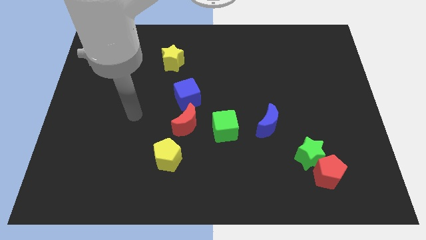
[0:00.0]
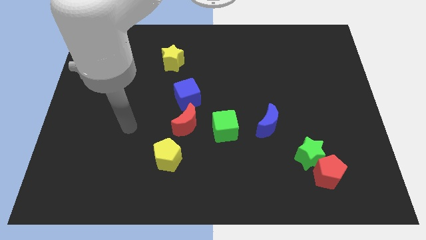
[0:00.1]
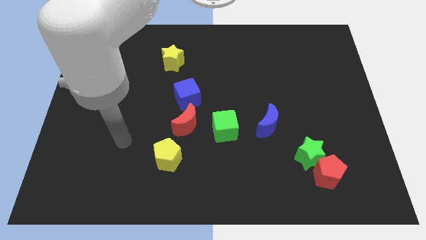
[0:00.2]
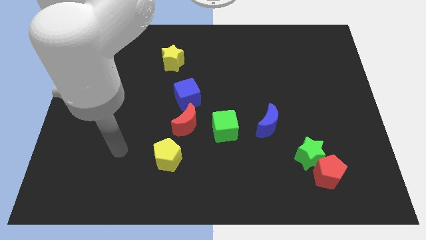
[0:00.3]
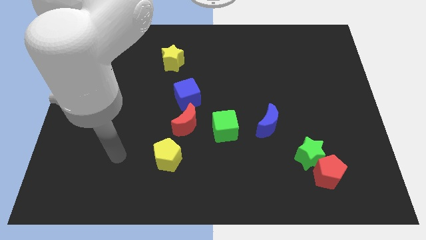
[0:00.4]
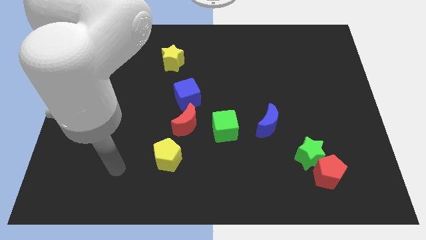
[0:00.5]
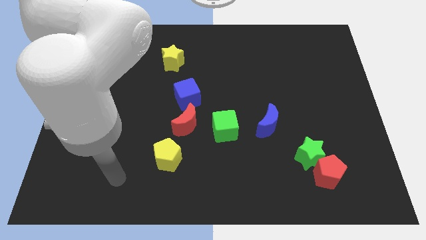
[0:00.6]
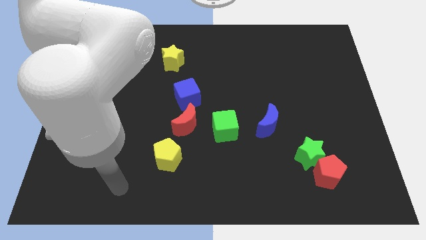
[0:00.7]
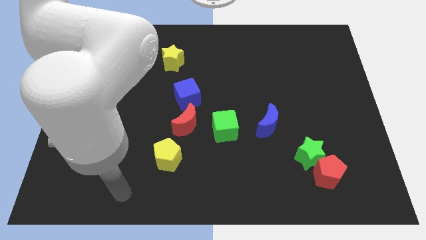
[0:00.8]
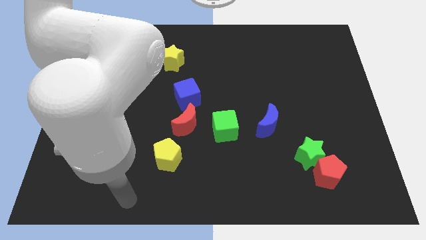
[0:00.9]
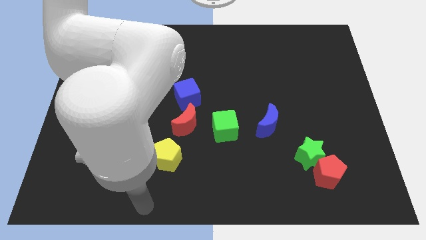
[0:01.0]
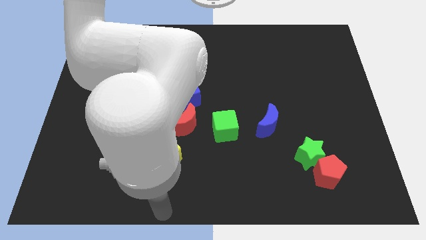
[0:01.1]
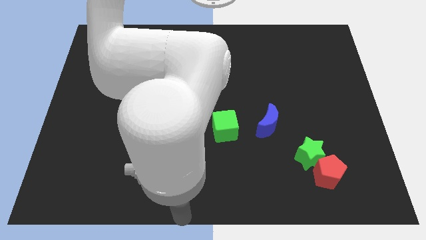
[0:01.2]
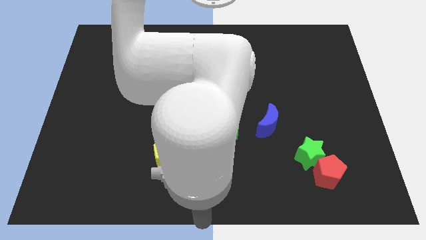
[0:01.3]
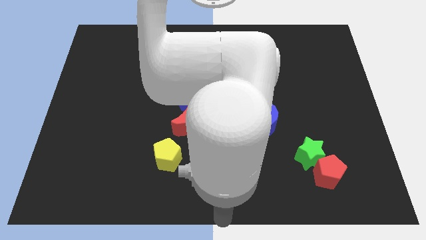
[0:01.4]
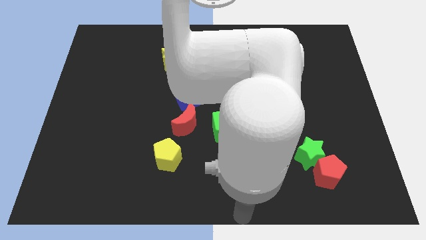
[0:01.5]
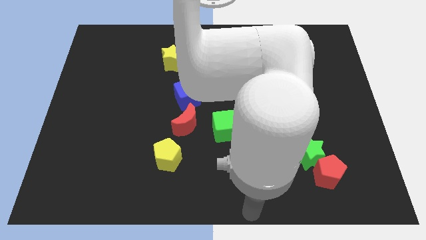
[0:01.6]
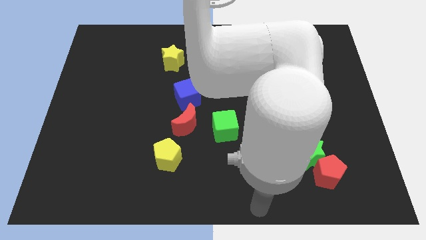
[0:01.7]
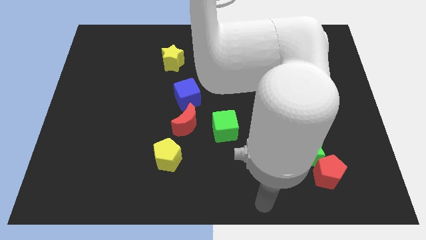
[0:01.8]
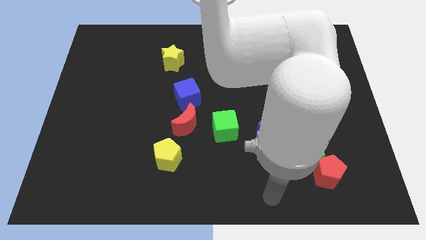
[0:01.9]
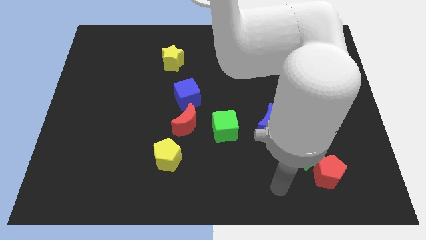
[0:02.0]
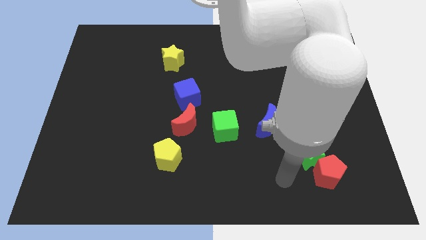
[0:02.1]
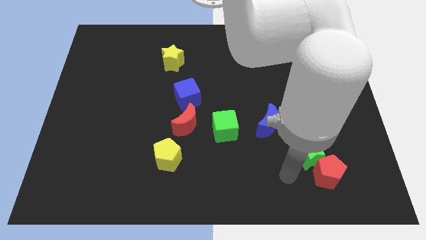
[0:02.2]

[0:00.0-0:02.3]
move your arm close to the green star

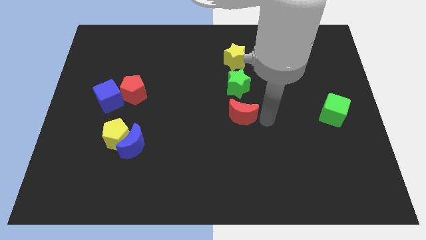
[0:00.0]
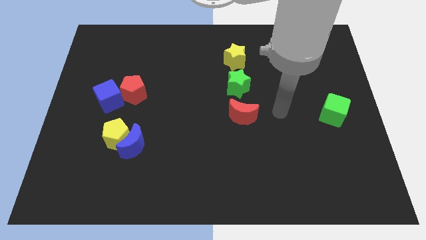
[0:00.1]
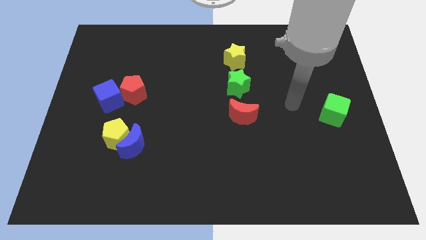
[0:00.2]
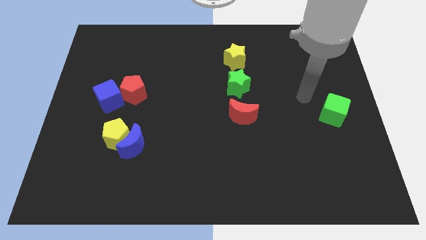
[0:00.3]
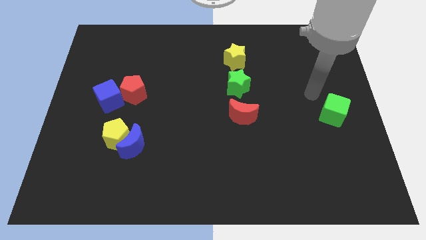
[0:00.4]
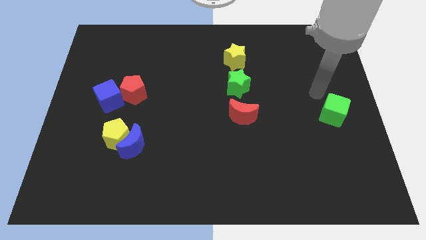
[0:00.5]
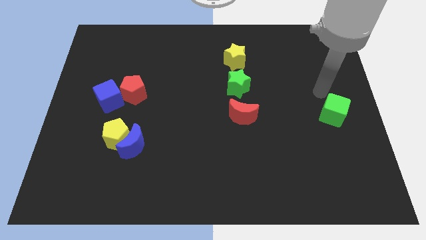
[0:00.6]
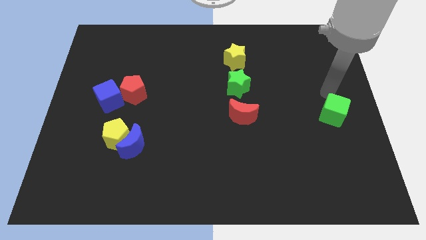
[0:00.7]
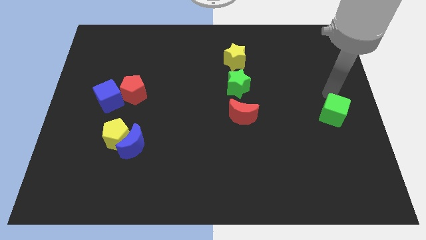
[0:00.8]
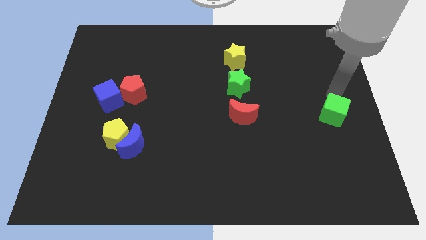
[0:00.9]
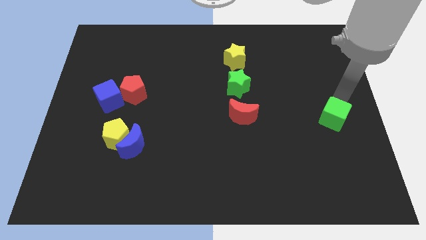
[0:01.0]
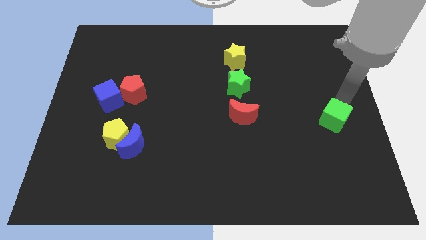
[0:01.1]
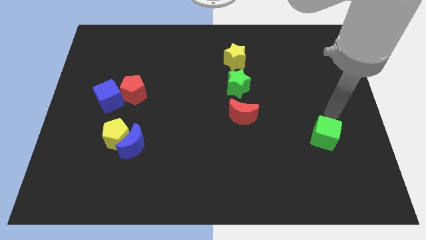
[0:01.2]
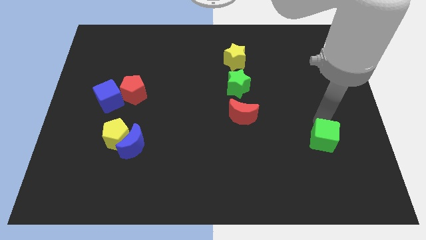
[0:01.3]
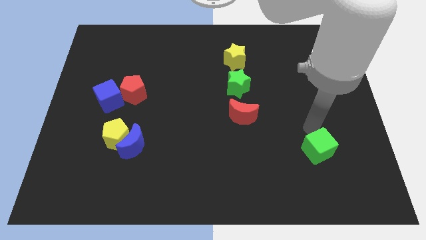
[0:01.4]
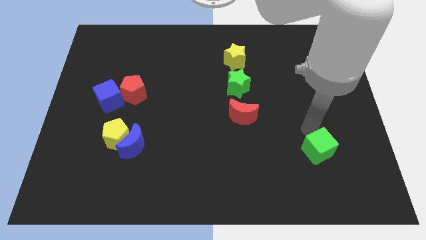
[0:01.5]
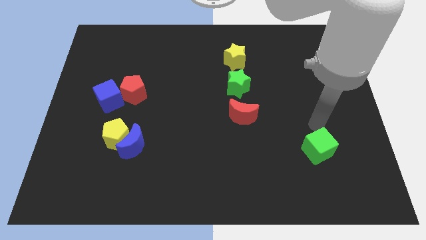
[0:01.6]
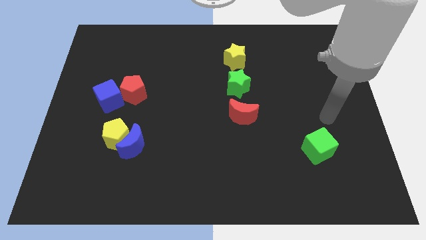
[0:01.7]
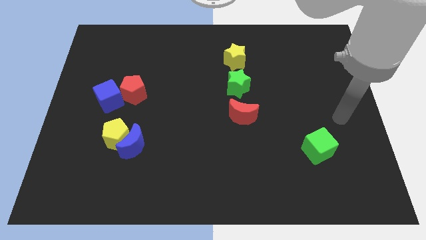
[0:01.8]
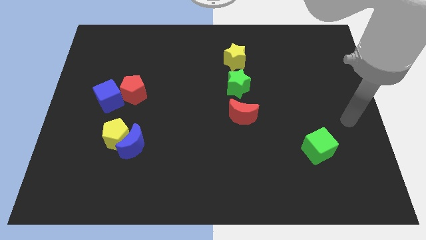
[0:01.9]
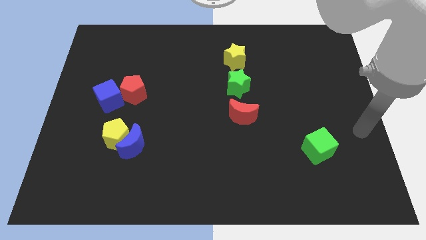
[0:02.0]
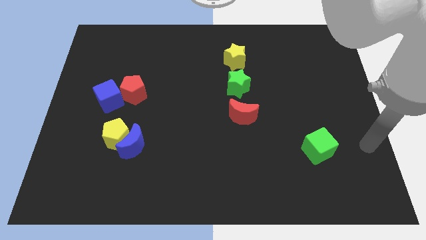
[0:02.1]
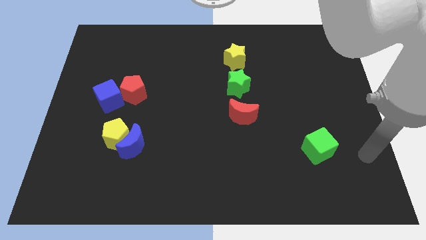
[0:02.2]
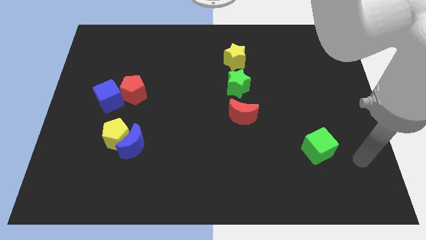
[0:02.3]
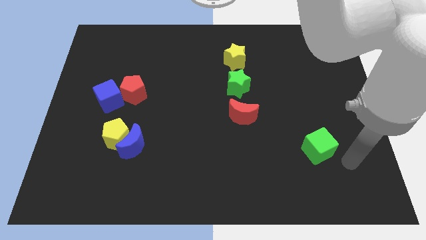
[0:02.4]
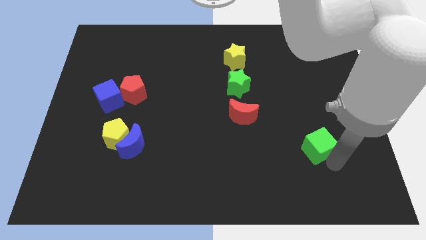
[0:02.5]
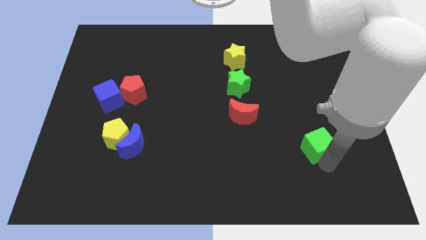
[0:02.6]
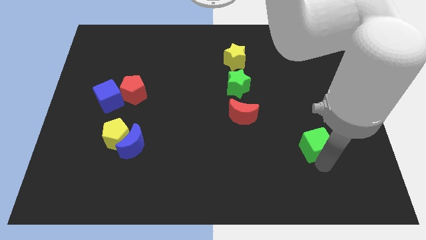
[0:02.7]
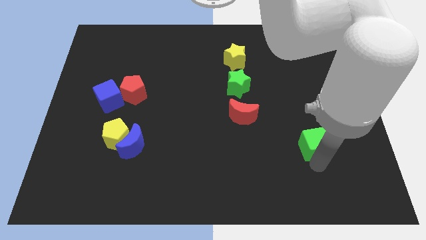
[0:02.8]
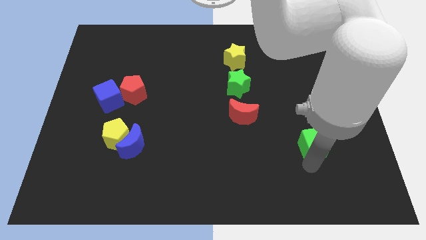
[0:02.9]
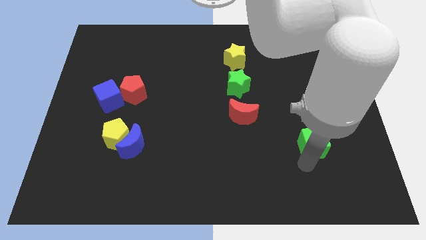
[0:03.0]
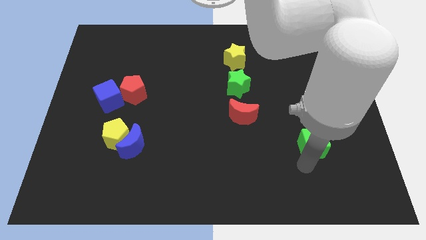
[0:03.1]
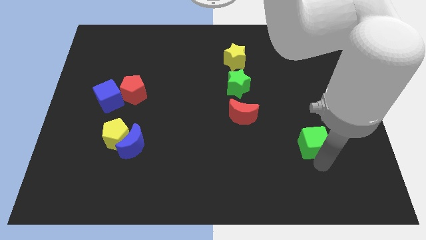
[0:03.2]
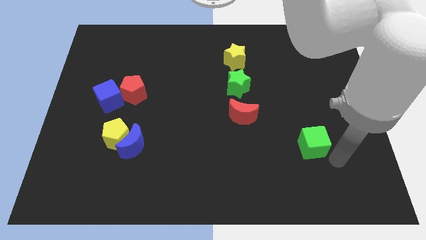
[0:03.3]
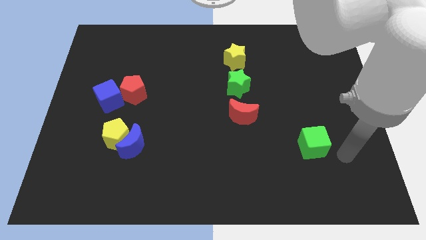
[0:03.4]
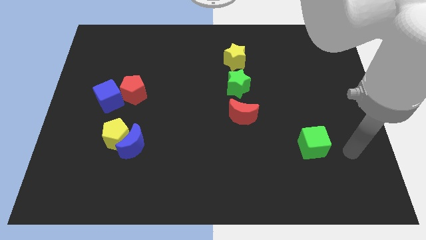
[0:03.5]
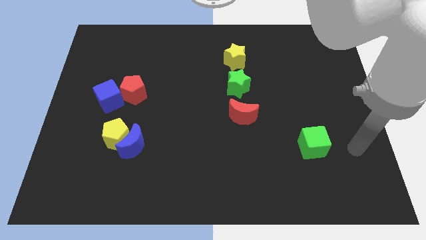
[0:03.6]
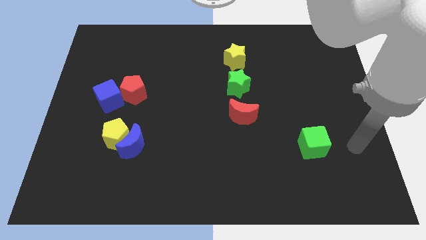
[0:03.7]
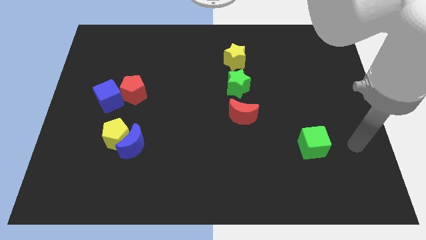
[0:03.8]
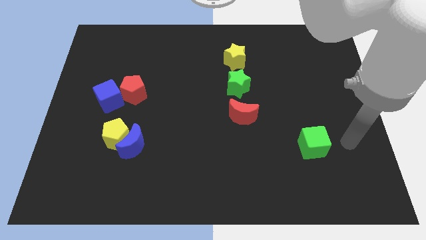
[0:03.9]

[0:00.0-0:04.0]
move your arm away from the red moon

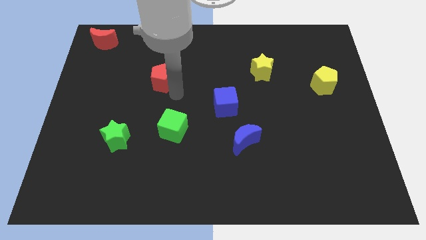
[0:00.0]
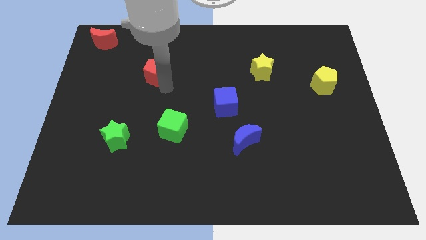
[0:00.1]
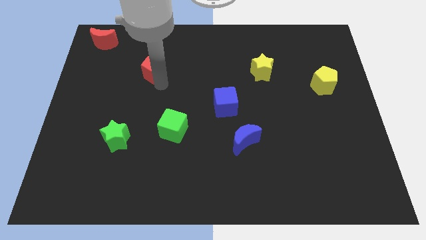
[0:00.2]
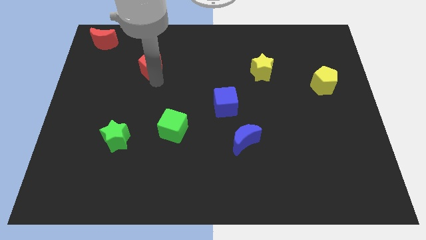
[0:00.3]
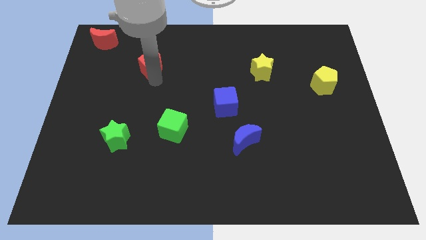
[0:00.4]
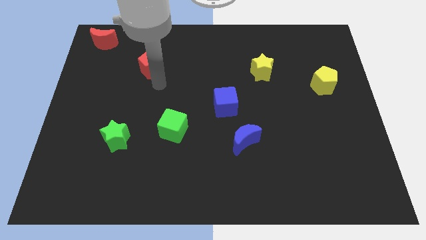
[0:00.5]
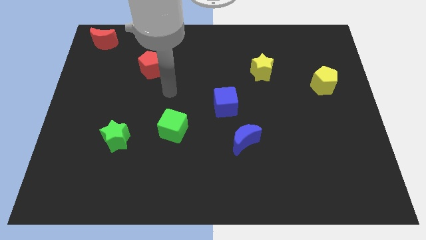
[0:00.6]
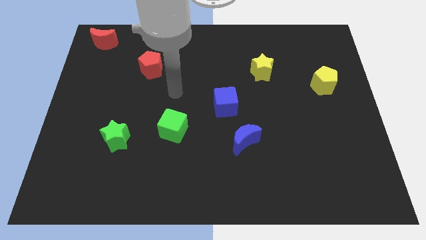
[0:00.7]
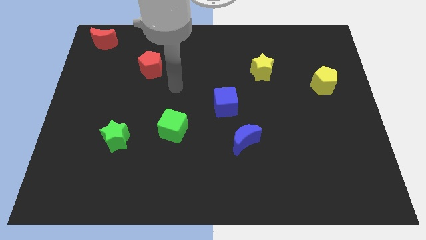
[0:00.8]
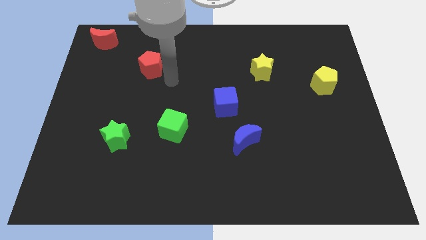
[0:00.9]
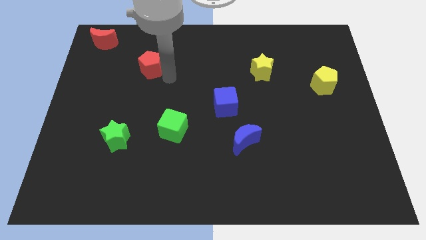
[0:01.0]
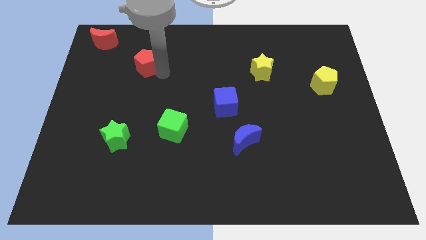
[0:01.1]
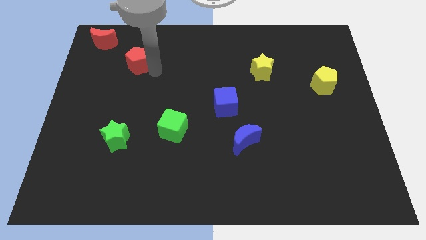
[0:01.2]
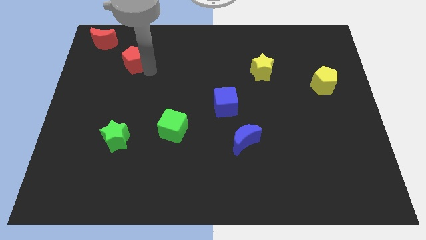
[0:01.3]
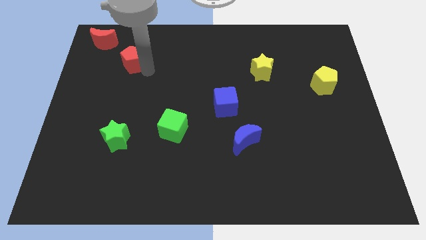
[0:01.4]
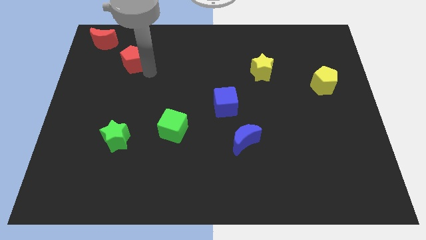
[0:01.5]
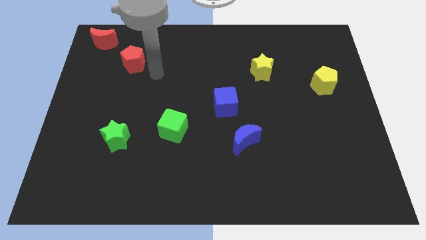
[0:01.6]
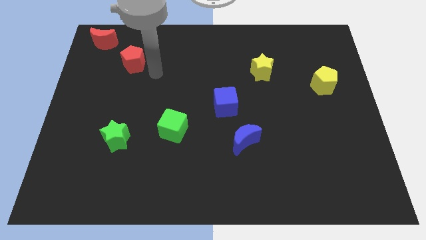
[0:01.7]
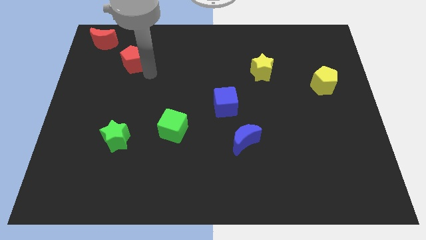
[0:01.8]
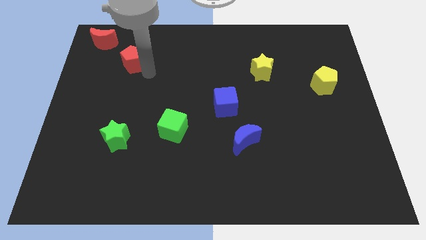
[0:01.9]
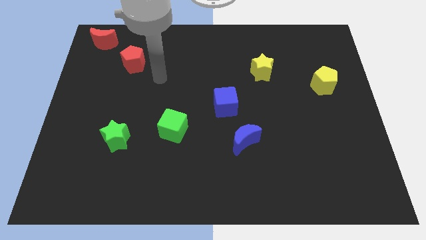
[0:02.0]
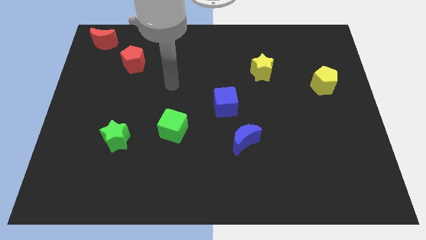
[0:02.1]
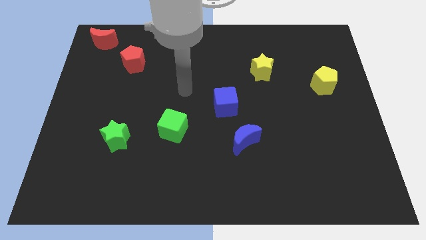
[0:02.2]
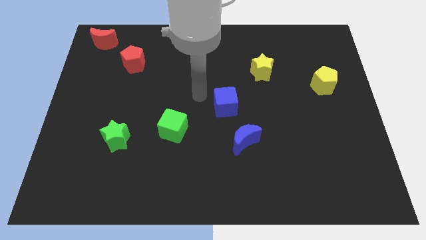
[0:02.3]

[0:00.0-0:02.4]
push the red pentagon close to the red moon
